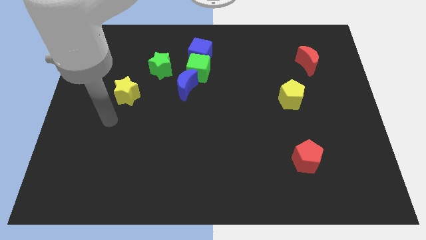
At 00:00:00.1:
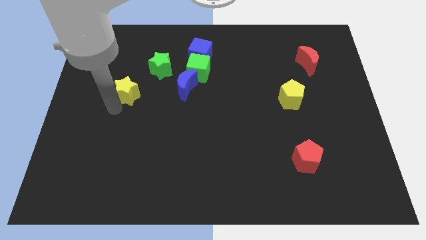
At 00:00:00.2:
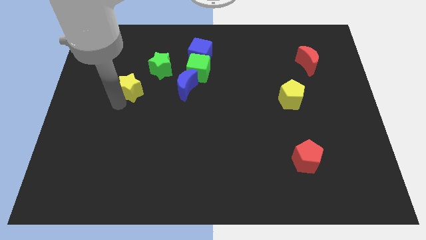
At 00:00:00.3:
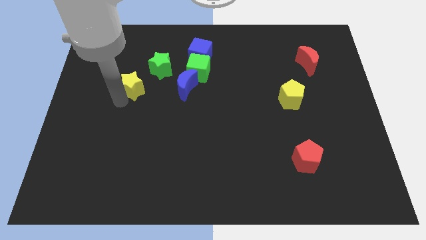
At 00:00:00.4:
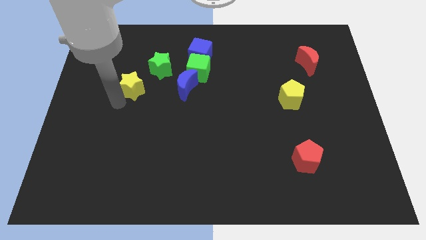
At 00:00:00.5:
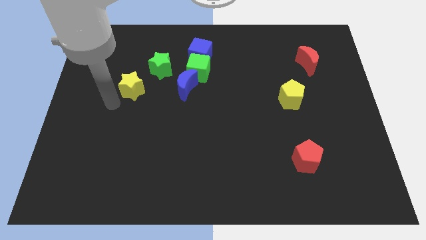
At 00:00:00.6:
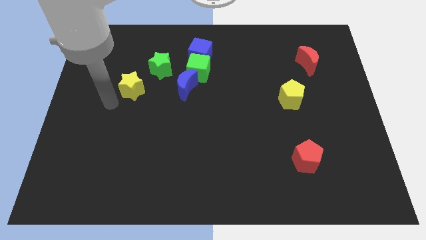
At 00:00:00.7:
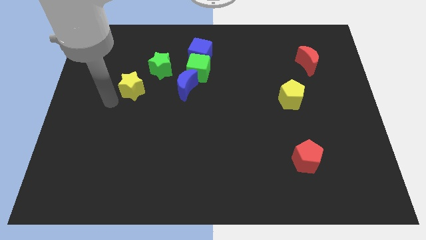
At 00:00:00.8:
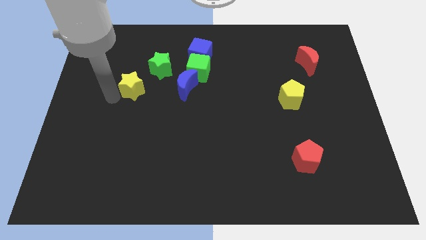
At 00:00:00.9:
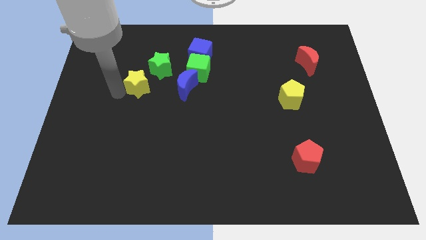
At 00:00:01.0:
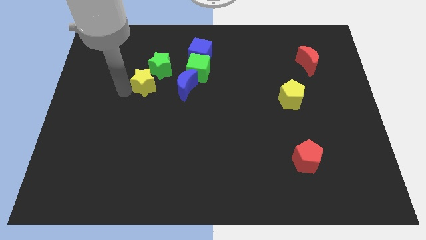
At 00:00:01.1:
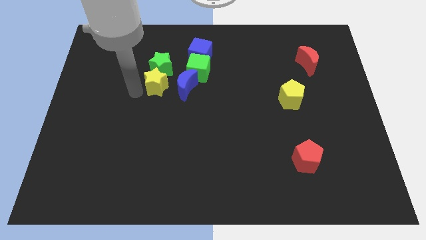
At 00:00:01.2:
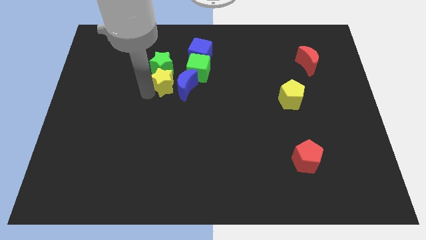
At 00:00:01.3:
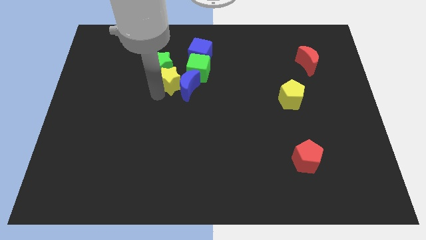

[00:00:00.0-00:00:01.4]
move the yellow star into the left side of the blue moon

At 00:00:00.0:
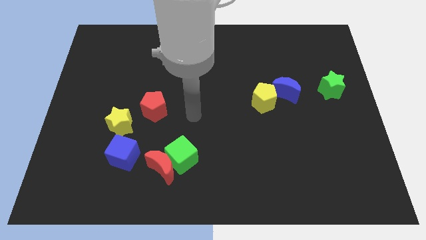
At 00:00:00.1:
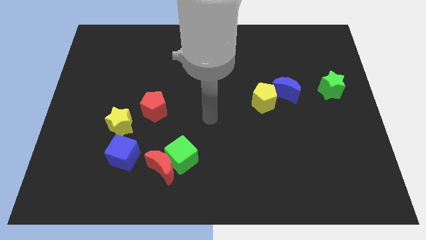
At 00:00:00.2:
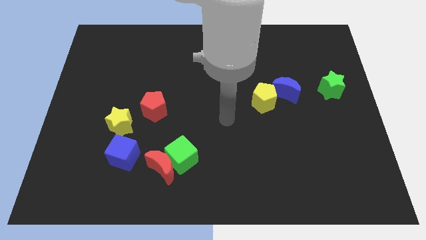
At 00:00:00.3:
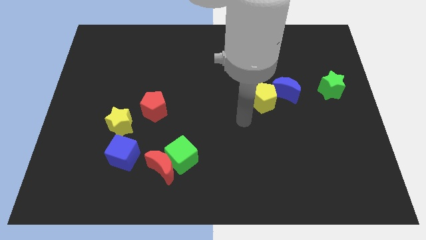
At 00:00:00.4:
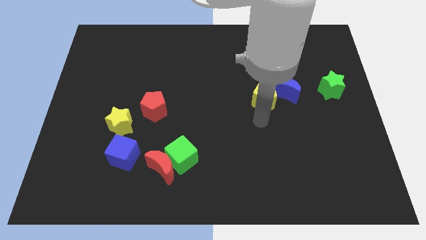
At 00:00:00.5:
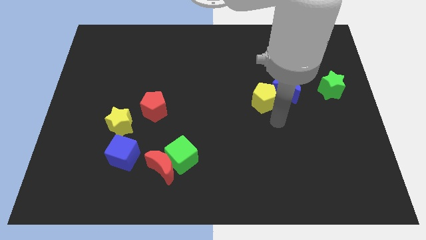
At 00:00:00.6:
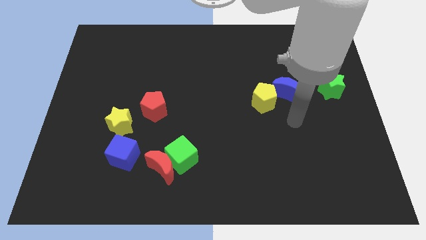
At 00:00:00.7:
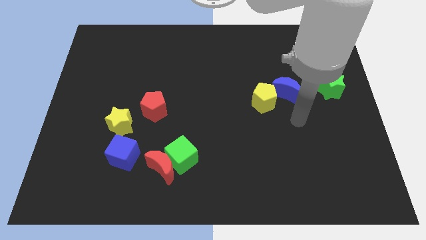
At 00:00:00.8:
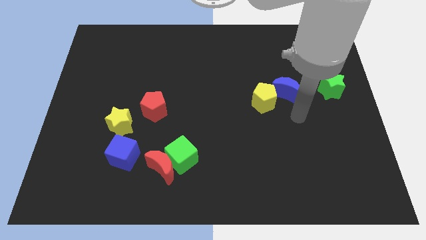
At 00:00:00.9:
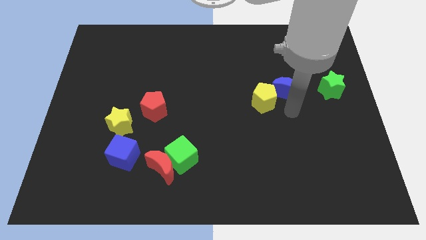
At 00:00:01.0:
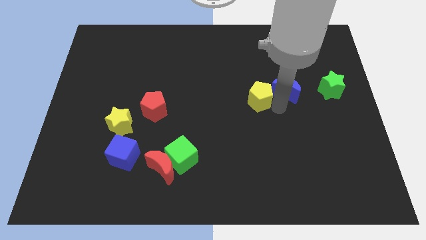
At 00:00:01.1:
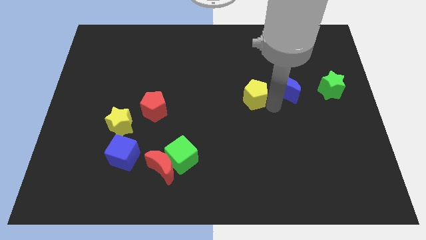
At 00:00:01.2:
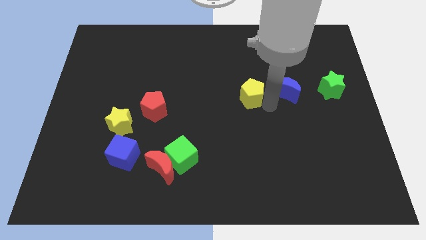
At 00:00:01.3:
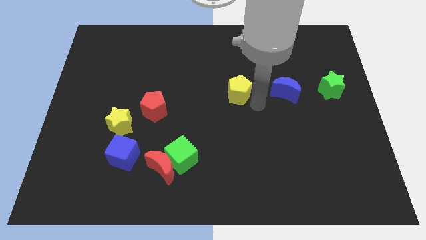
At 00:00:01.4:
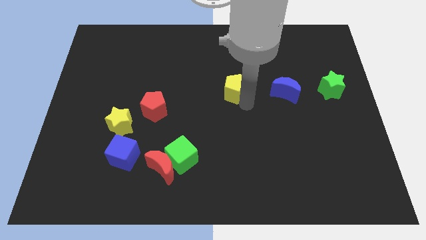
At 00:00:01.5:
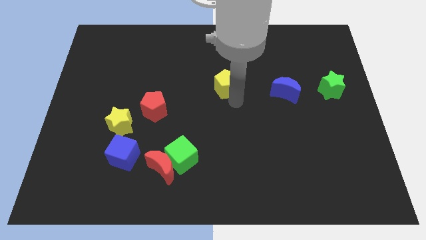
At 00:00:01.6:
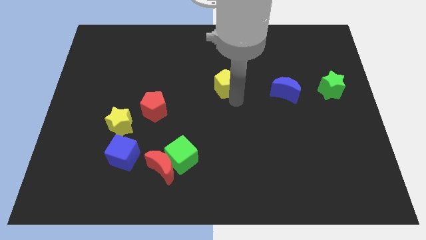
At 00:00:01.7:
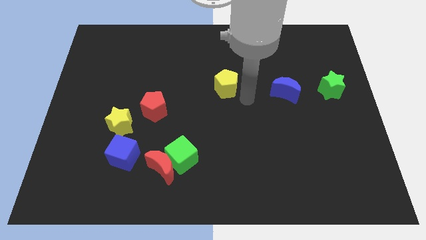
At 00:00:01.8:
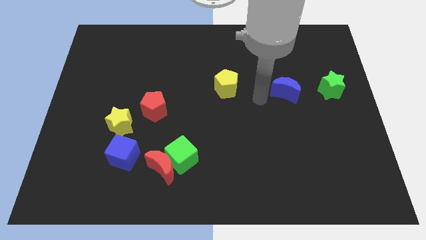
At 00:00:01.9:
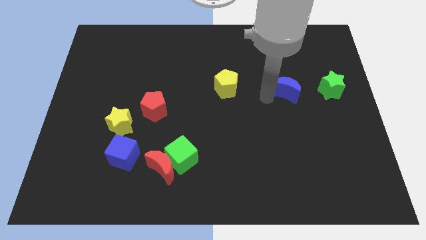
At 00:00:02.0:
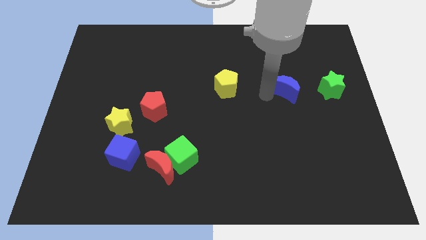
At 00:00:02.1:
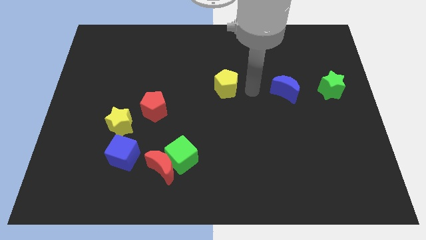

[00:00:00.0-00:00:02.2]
place the yellow pentagon towards the center side

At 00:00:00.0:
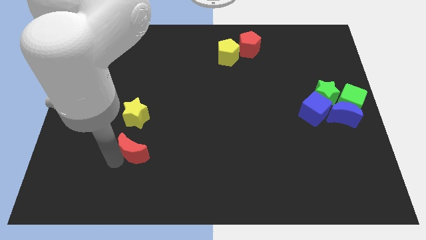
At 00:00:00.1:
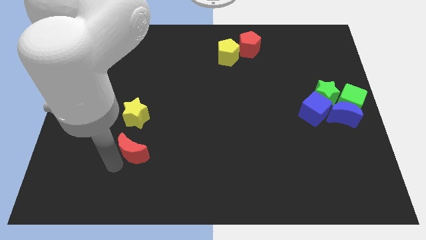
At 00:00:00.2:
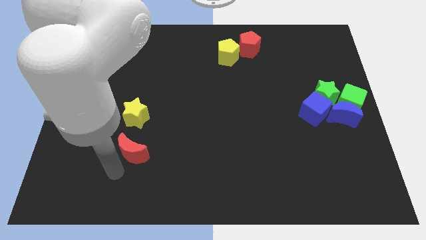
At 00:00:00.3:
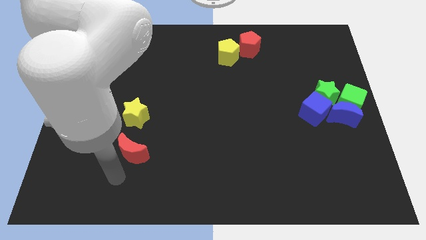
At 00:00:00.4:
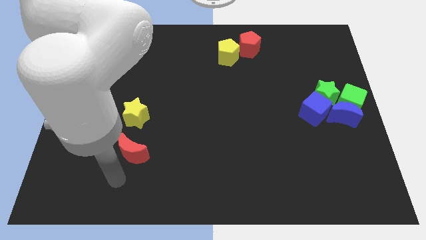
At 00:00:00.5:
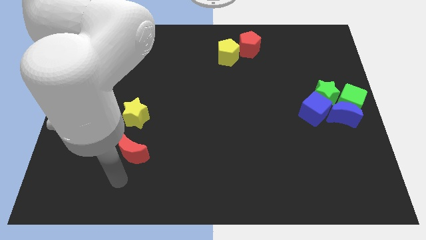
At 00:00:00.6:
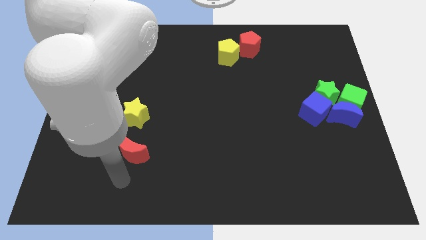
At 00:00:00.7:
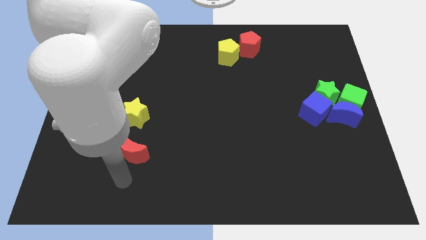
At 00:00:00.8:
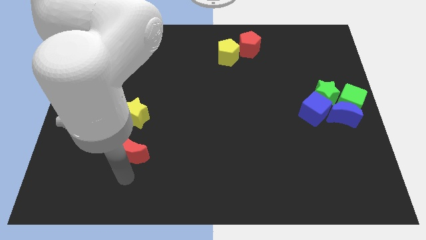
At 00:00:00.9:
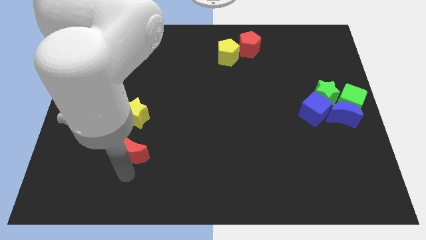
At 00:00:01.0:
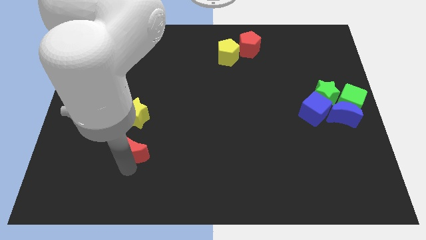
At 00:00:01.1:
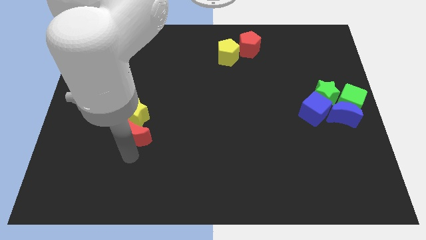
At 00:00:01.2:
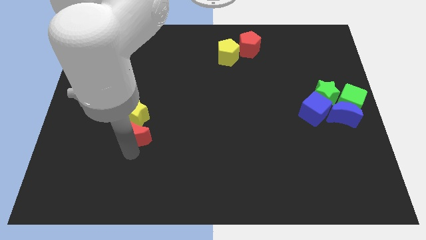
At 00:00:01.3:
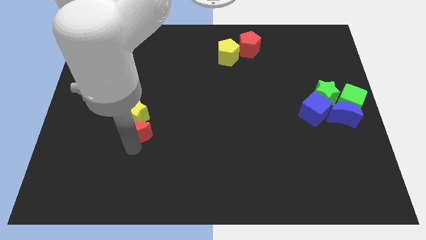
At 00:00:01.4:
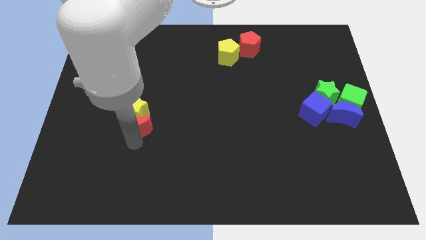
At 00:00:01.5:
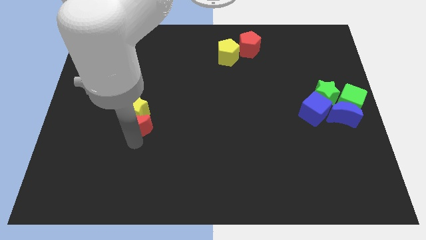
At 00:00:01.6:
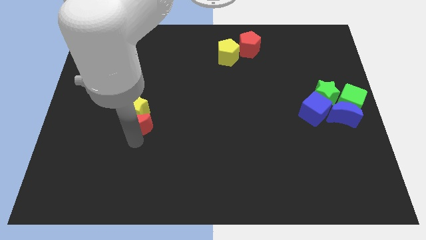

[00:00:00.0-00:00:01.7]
push the red crescent into the yellow star

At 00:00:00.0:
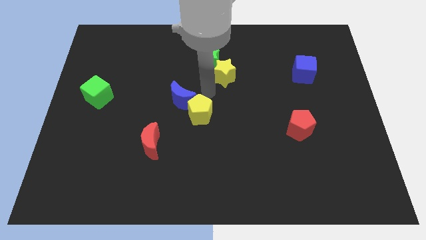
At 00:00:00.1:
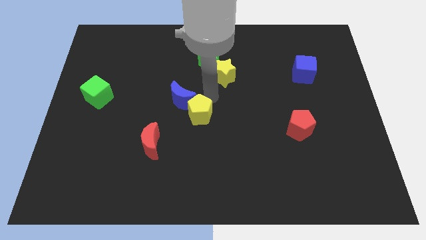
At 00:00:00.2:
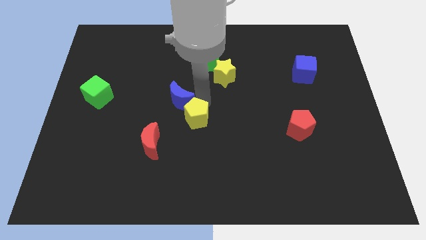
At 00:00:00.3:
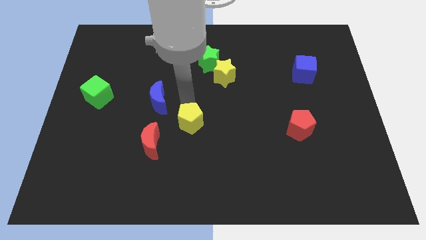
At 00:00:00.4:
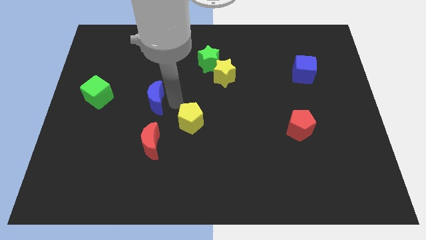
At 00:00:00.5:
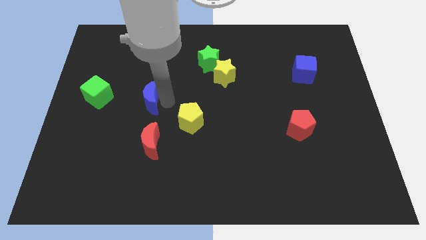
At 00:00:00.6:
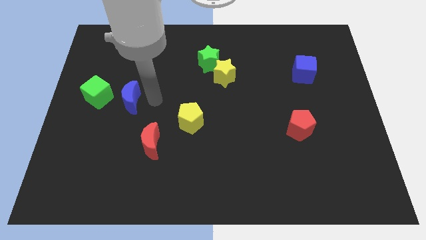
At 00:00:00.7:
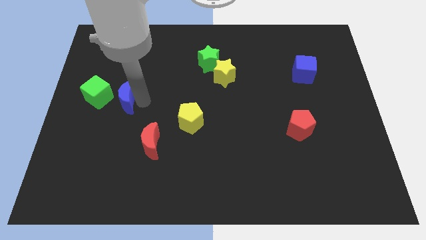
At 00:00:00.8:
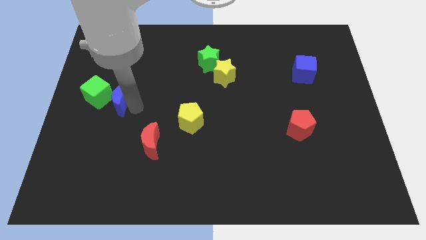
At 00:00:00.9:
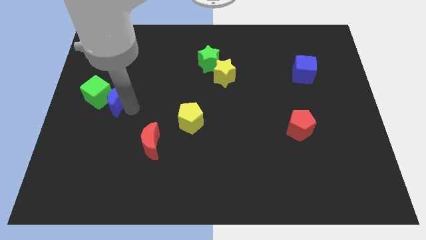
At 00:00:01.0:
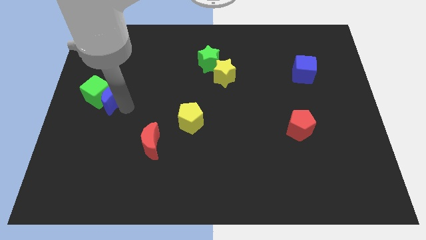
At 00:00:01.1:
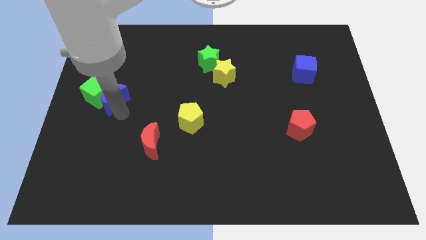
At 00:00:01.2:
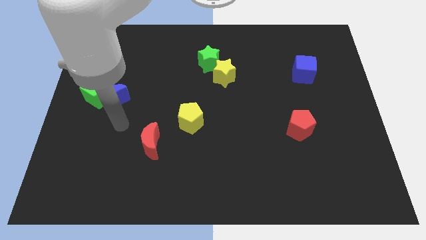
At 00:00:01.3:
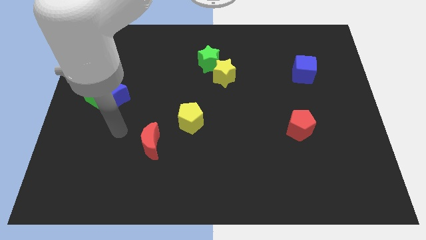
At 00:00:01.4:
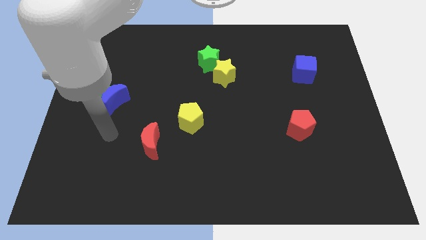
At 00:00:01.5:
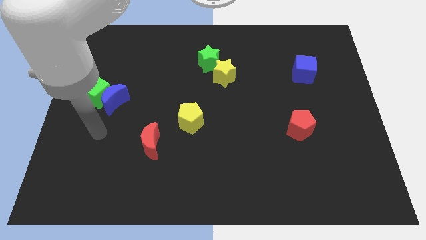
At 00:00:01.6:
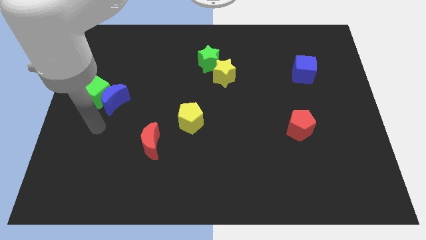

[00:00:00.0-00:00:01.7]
put the blue moon and green cube together

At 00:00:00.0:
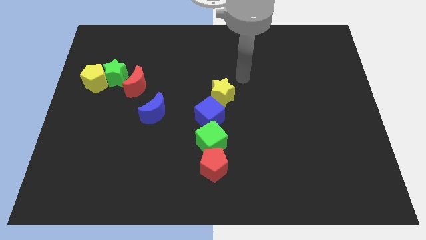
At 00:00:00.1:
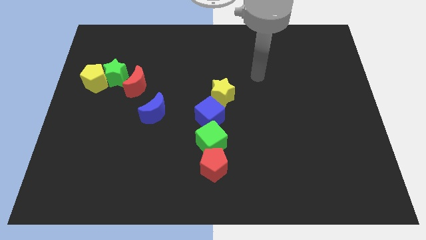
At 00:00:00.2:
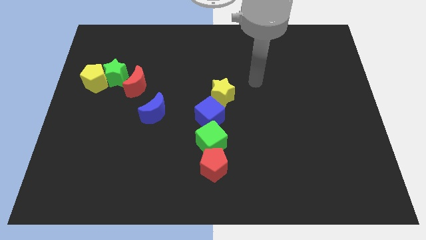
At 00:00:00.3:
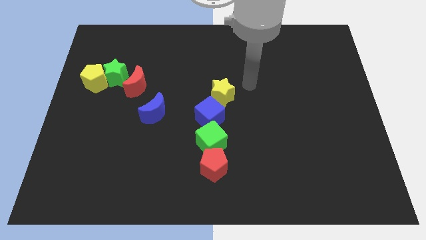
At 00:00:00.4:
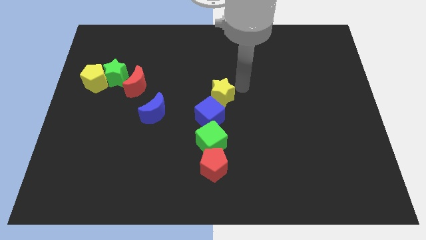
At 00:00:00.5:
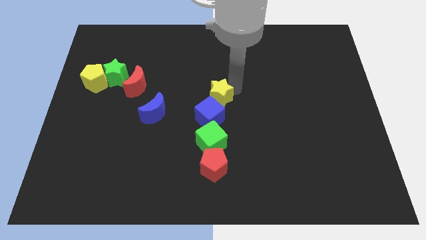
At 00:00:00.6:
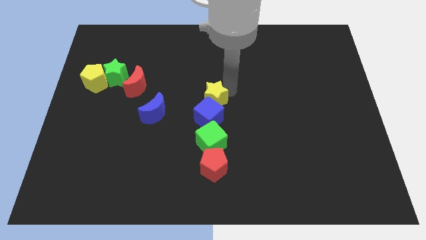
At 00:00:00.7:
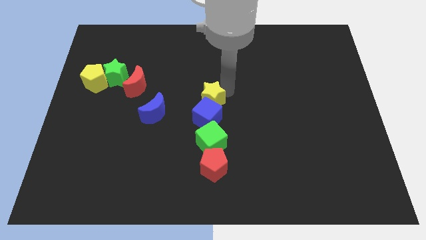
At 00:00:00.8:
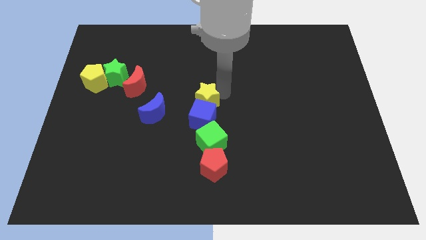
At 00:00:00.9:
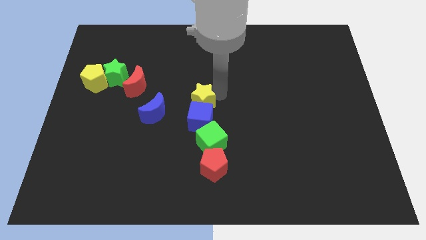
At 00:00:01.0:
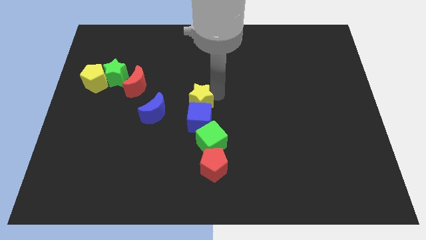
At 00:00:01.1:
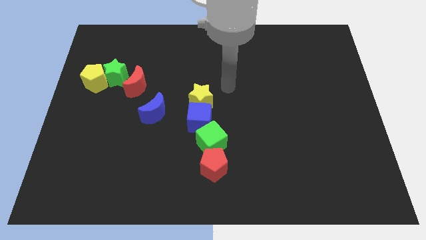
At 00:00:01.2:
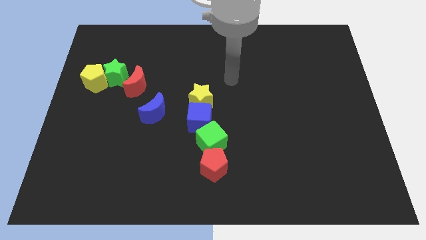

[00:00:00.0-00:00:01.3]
slide the yellow star to the top of the blue cube

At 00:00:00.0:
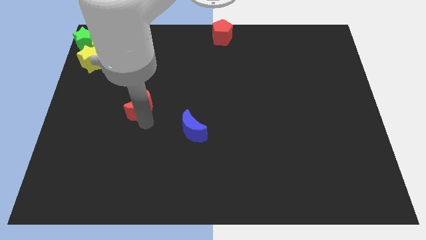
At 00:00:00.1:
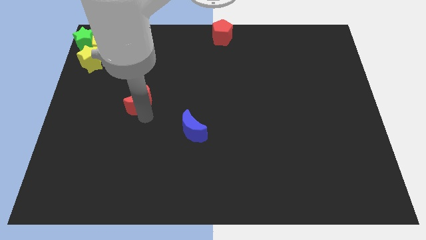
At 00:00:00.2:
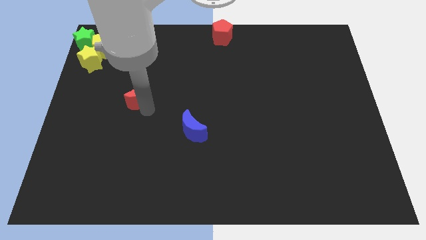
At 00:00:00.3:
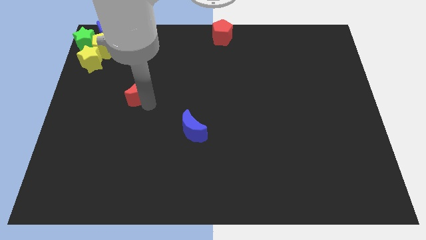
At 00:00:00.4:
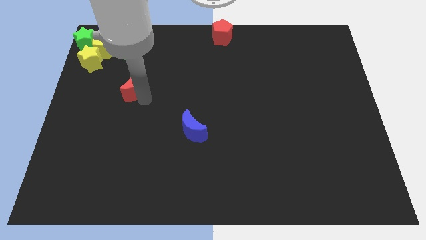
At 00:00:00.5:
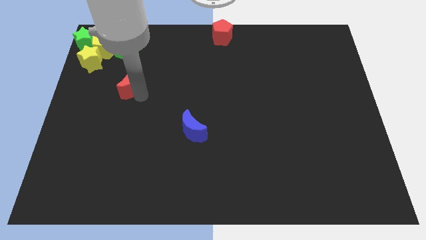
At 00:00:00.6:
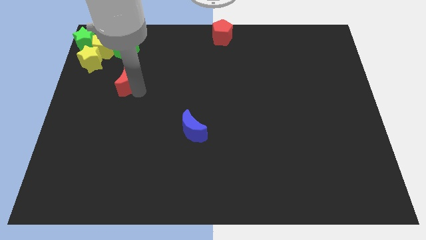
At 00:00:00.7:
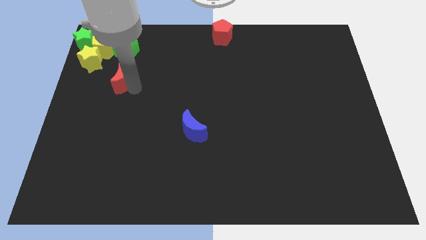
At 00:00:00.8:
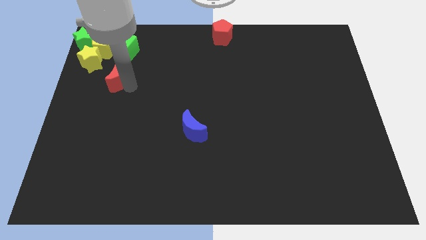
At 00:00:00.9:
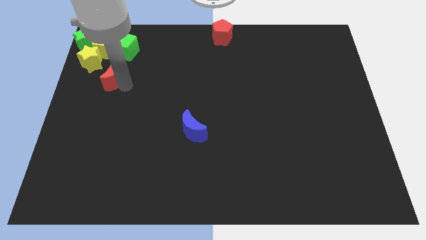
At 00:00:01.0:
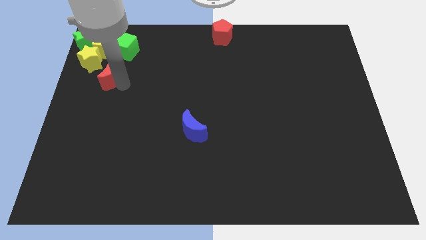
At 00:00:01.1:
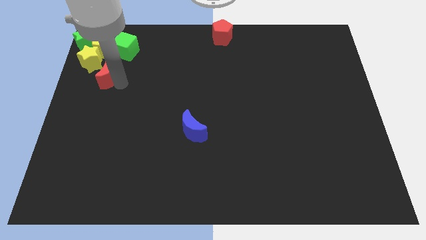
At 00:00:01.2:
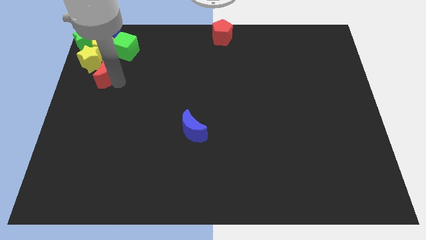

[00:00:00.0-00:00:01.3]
move the red crescent towards the yellow star
